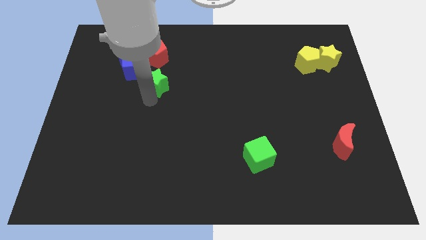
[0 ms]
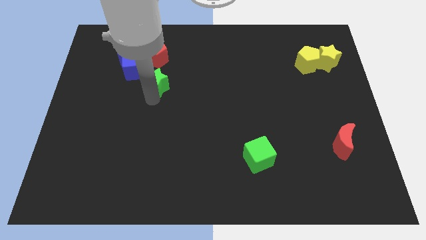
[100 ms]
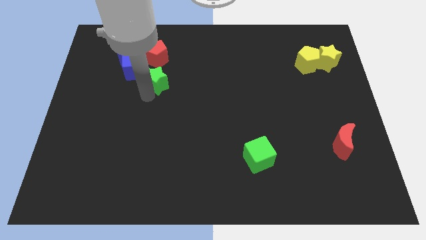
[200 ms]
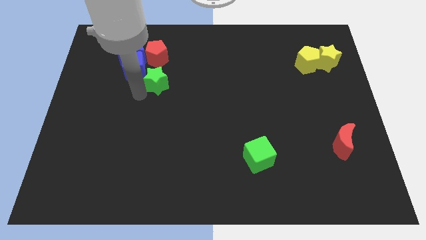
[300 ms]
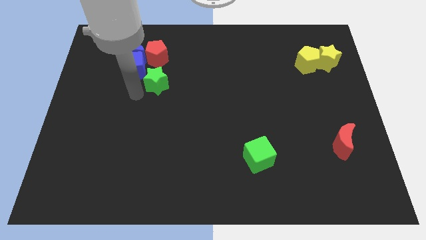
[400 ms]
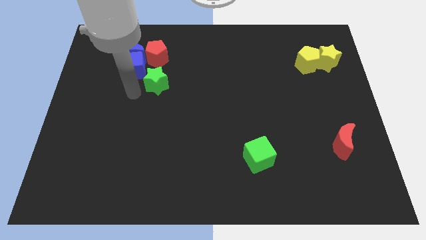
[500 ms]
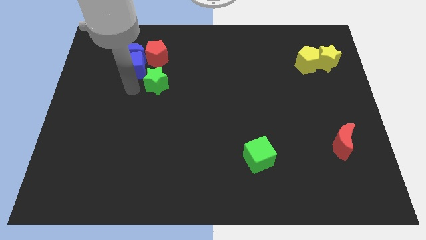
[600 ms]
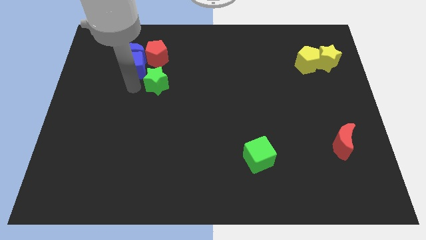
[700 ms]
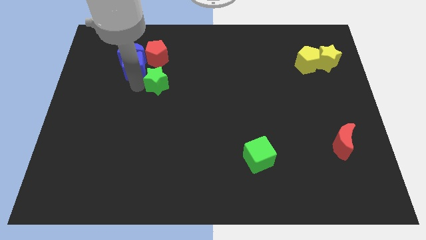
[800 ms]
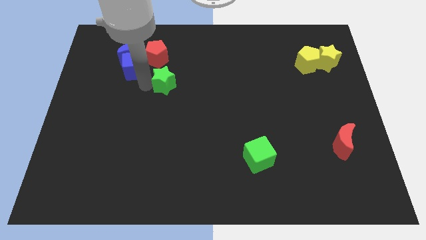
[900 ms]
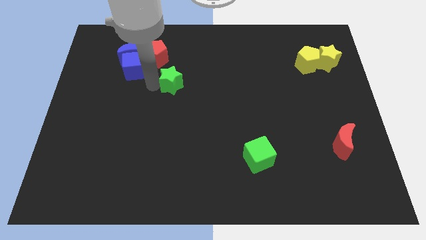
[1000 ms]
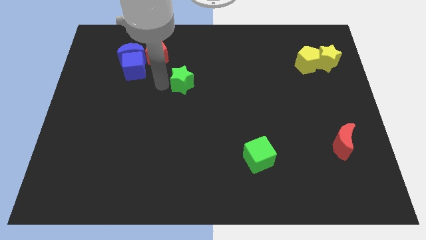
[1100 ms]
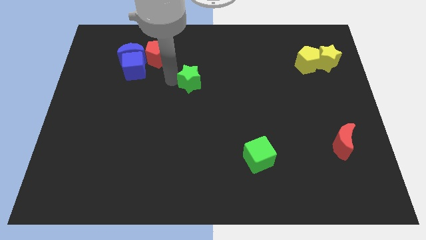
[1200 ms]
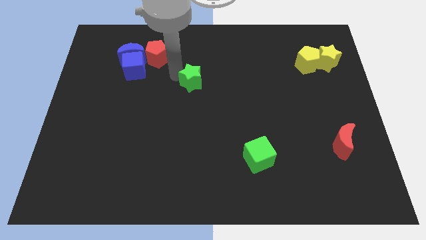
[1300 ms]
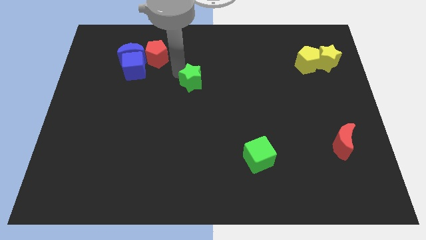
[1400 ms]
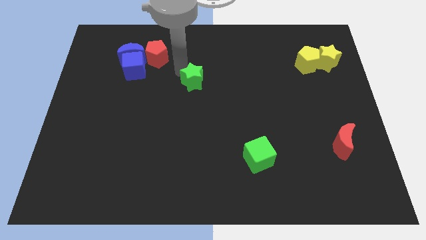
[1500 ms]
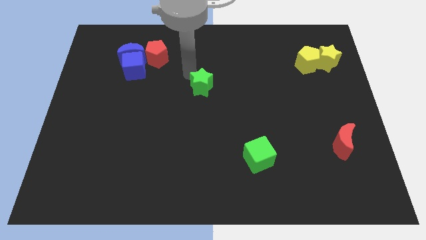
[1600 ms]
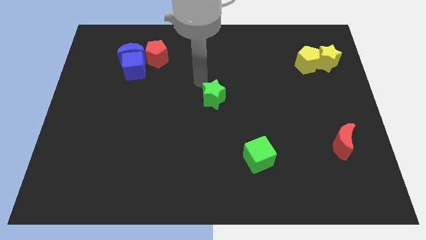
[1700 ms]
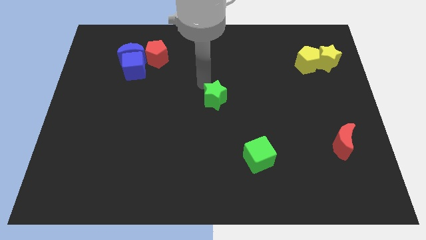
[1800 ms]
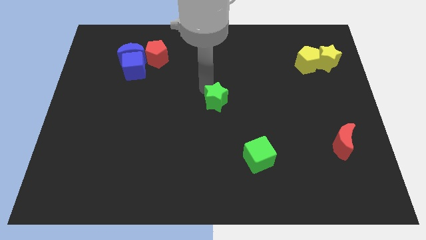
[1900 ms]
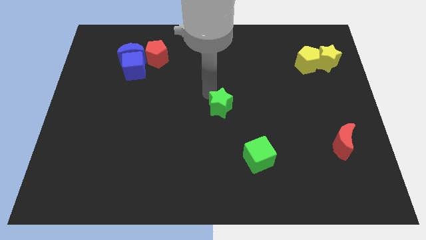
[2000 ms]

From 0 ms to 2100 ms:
move the green star at the center of the board

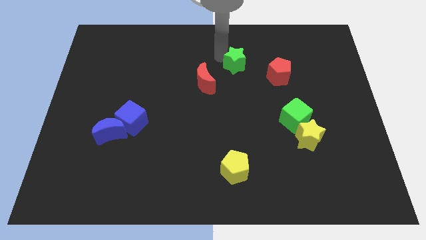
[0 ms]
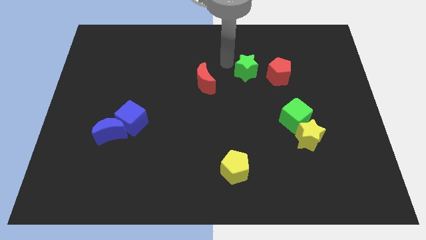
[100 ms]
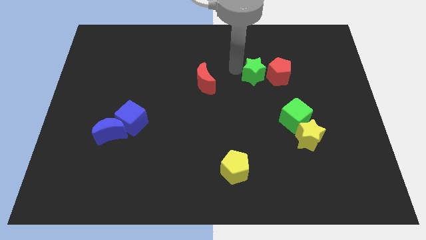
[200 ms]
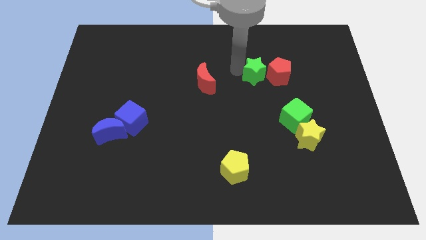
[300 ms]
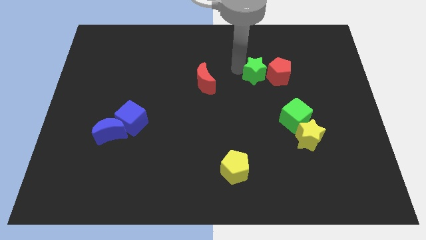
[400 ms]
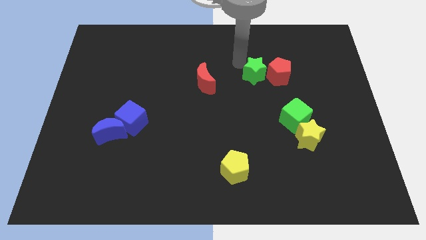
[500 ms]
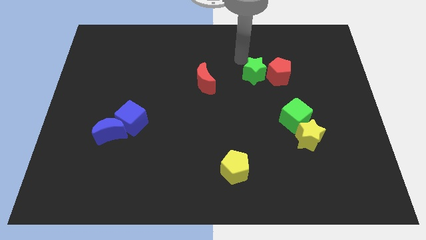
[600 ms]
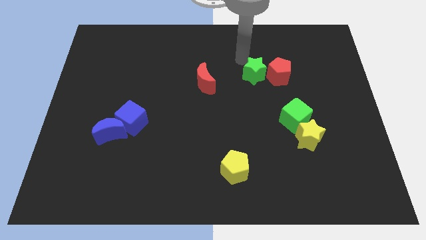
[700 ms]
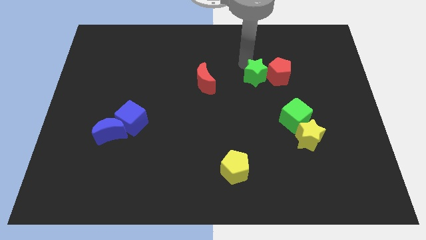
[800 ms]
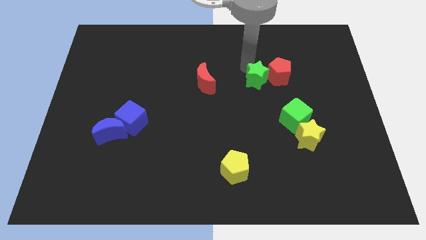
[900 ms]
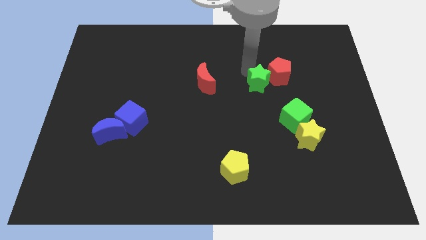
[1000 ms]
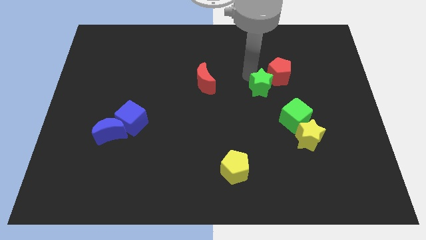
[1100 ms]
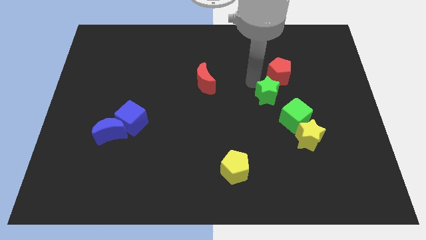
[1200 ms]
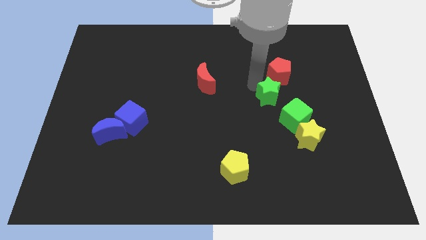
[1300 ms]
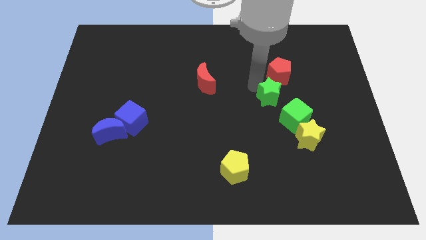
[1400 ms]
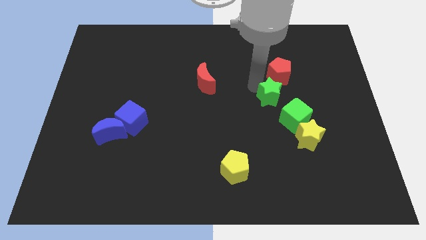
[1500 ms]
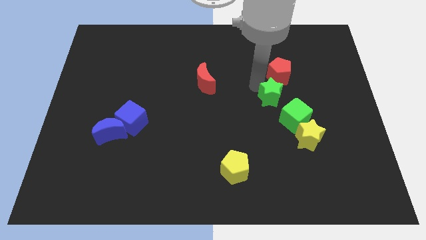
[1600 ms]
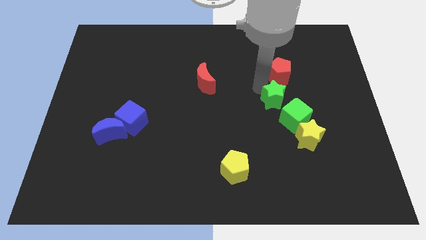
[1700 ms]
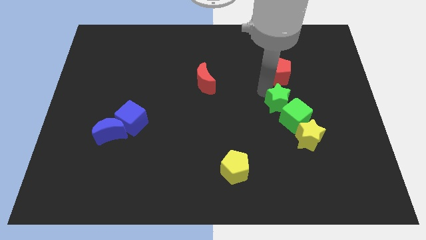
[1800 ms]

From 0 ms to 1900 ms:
push the green star below the red pentagon

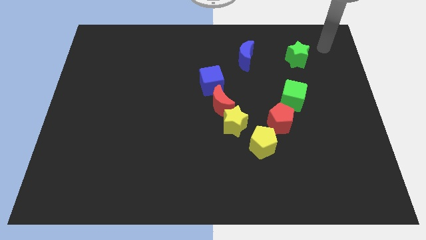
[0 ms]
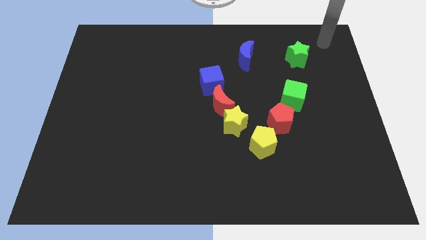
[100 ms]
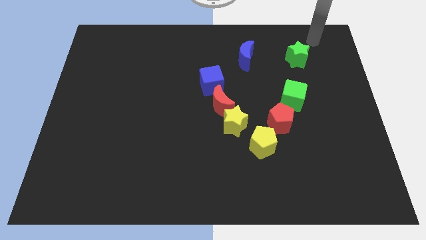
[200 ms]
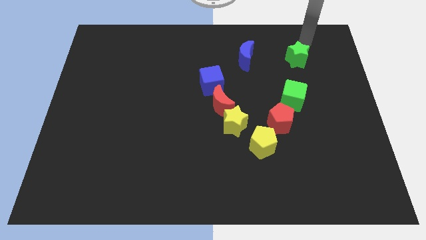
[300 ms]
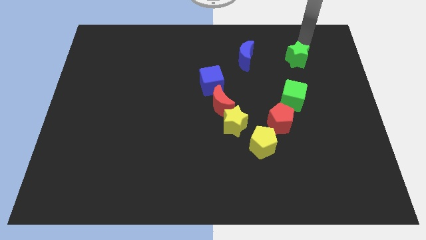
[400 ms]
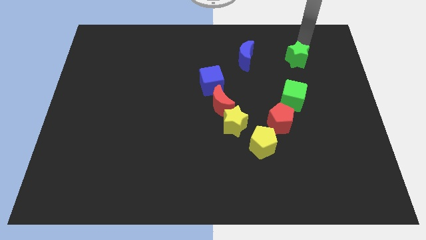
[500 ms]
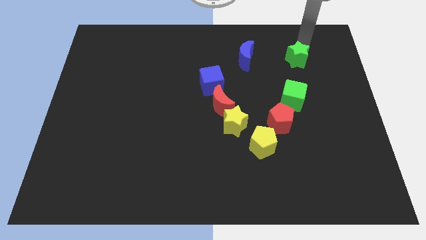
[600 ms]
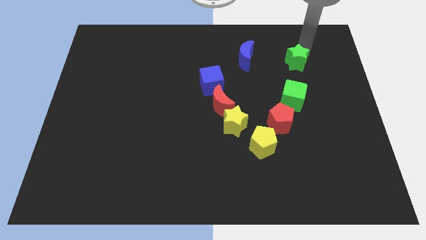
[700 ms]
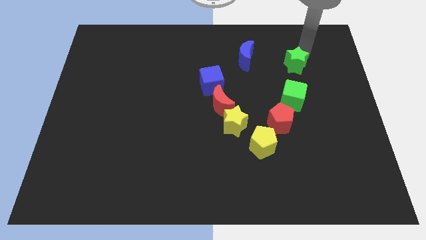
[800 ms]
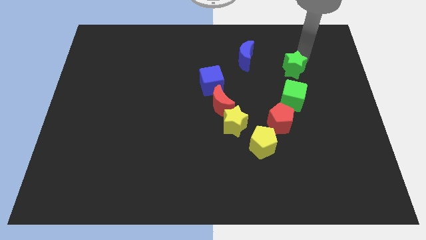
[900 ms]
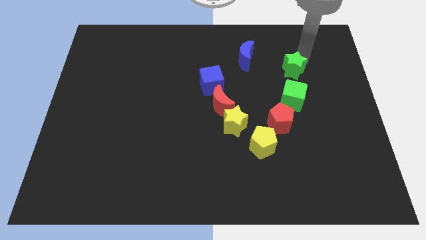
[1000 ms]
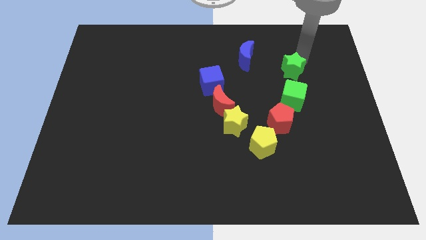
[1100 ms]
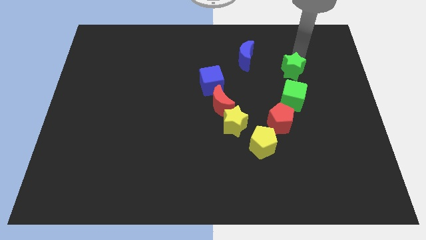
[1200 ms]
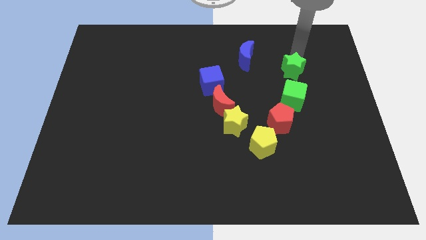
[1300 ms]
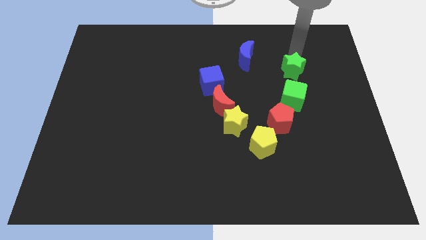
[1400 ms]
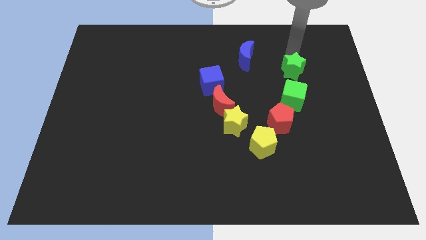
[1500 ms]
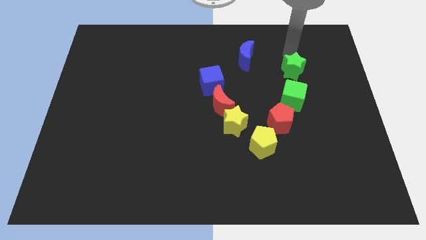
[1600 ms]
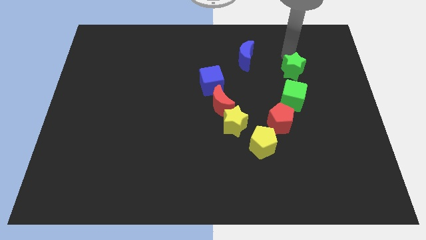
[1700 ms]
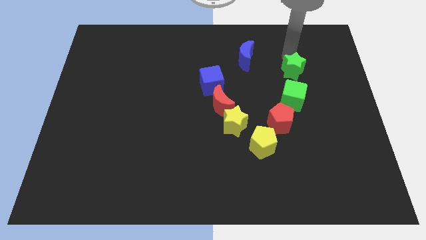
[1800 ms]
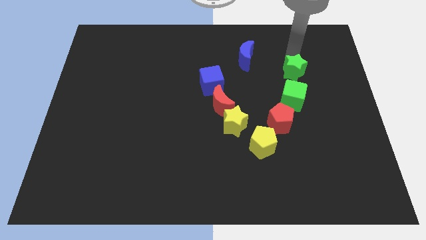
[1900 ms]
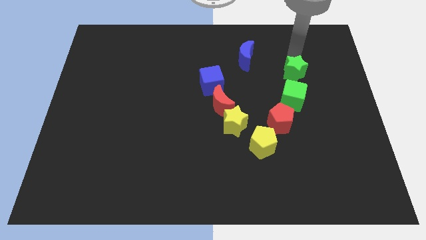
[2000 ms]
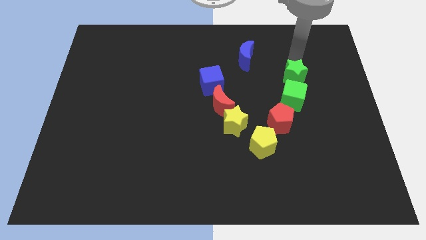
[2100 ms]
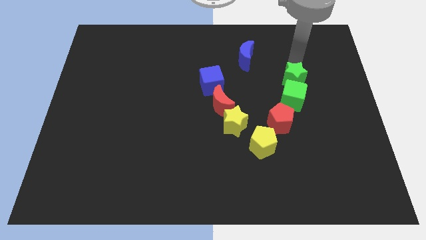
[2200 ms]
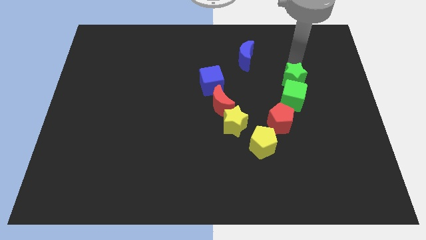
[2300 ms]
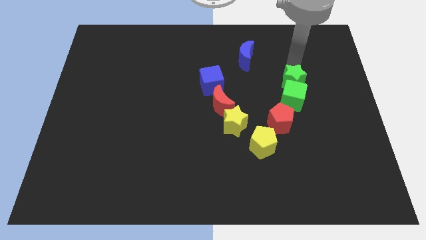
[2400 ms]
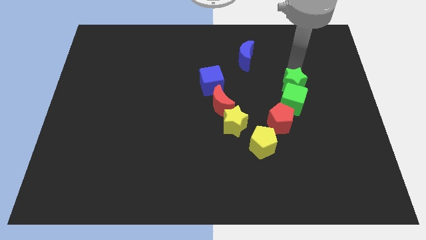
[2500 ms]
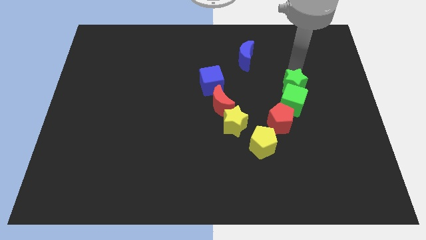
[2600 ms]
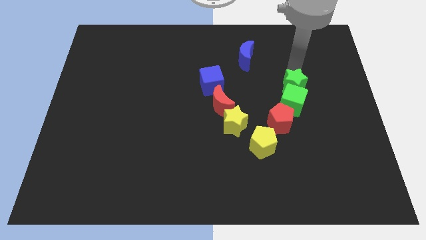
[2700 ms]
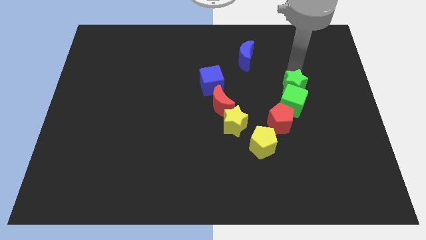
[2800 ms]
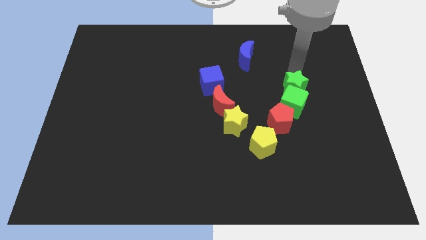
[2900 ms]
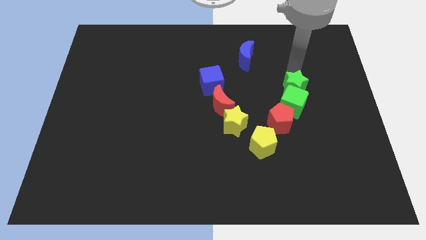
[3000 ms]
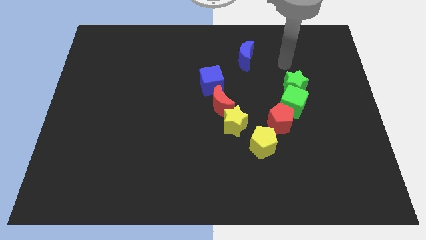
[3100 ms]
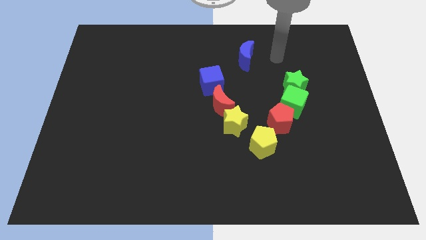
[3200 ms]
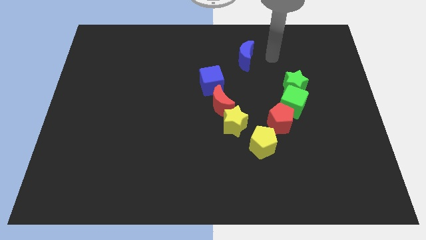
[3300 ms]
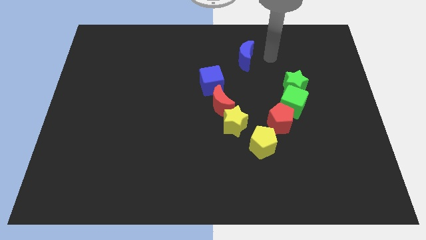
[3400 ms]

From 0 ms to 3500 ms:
push the green star towards the green cube

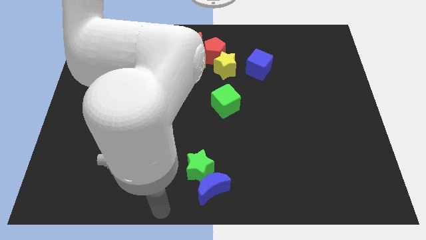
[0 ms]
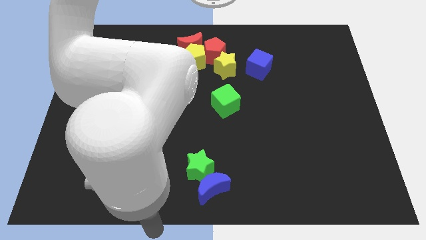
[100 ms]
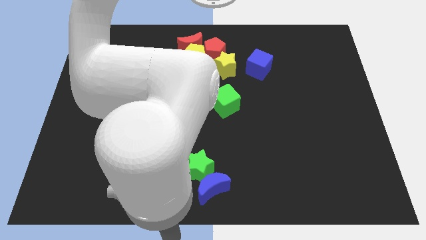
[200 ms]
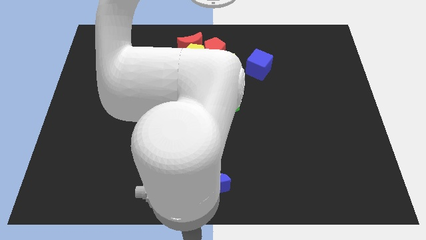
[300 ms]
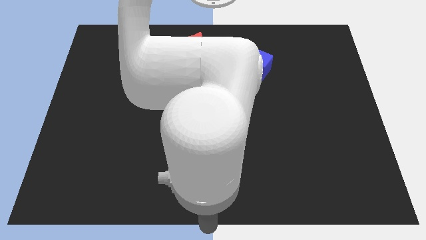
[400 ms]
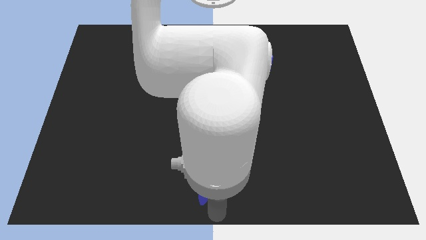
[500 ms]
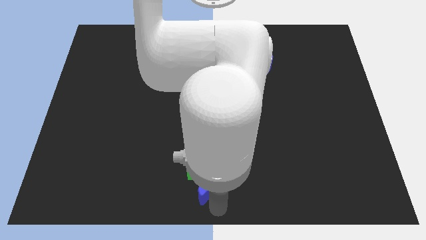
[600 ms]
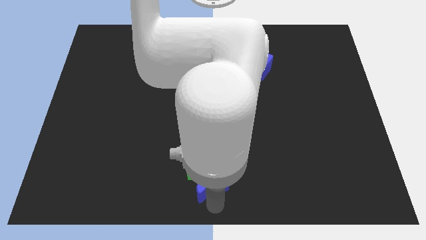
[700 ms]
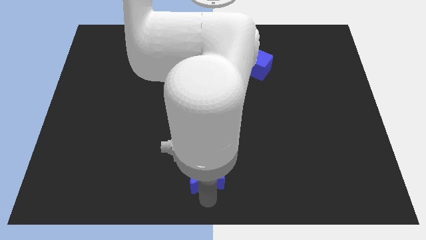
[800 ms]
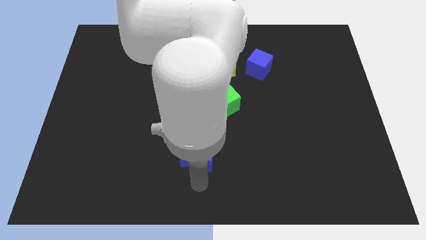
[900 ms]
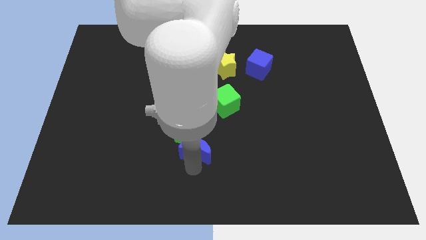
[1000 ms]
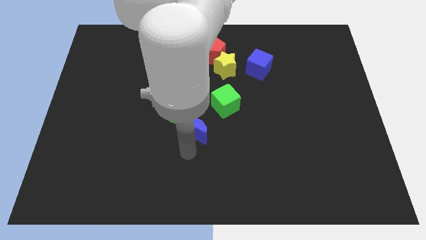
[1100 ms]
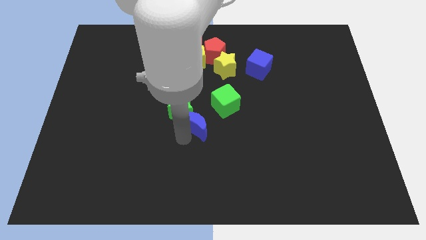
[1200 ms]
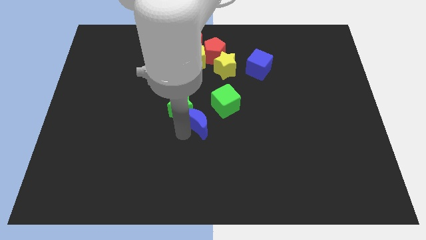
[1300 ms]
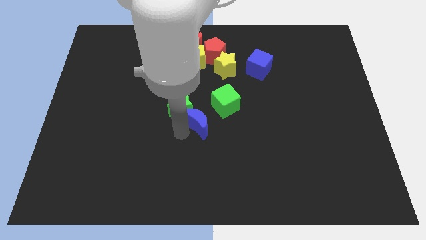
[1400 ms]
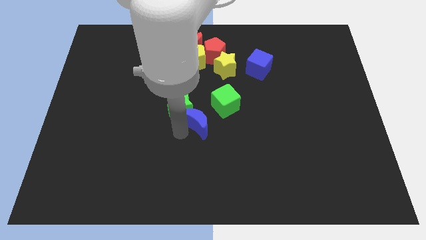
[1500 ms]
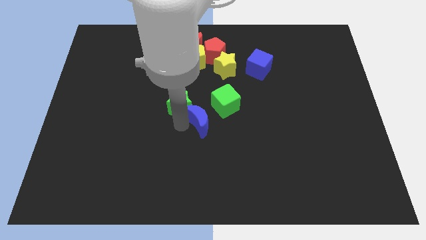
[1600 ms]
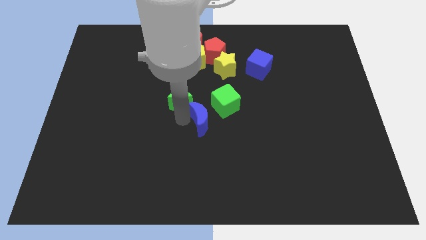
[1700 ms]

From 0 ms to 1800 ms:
slide the green star and blue crescent to the left side of the green cube
